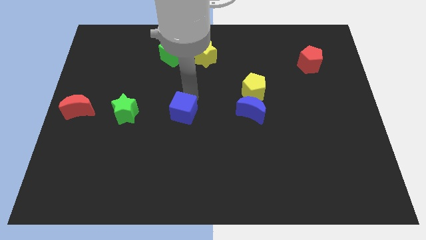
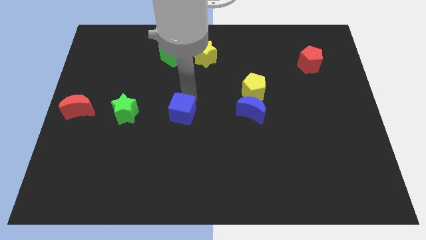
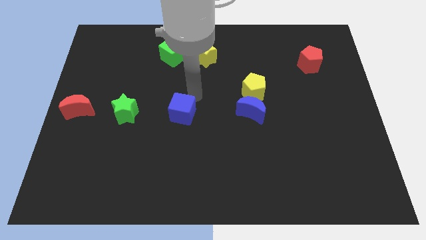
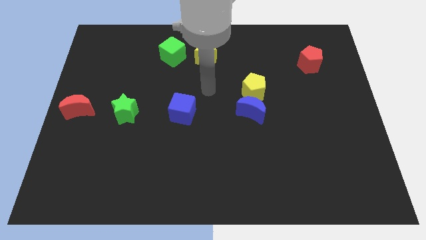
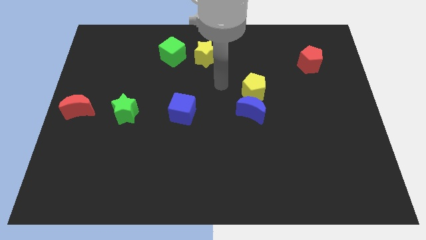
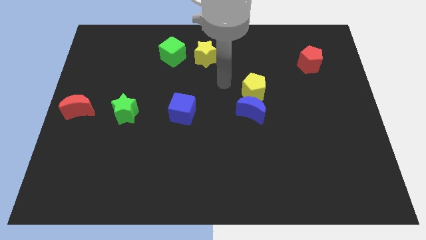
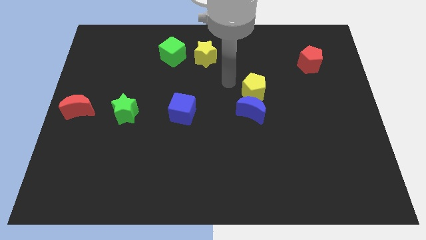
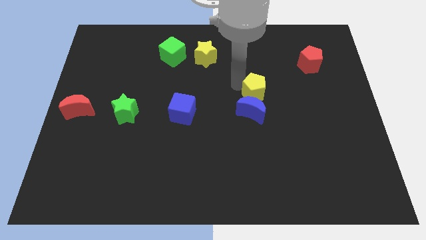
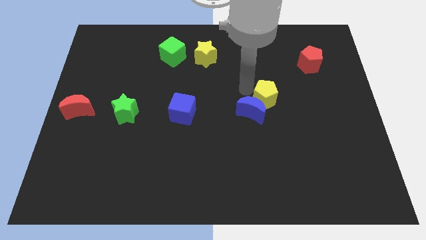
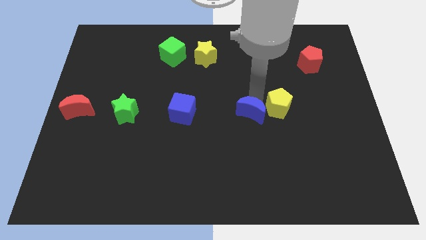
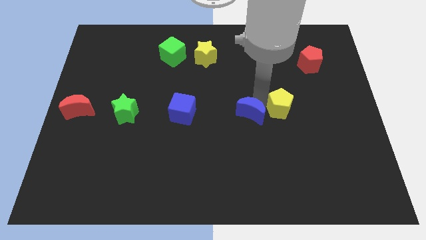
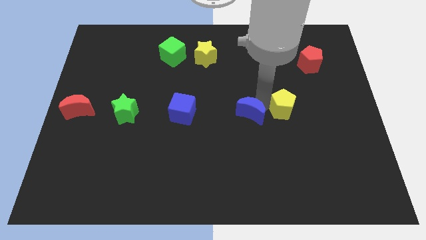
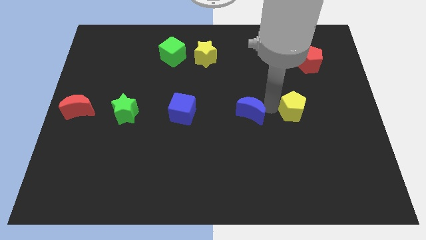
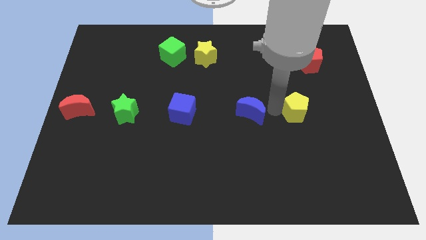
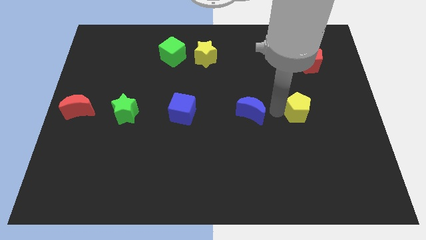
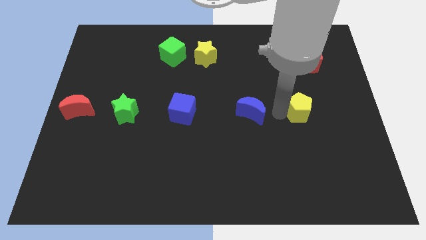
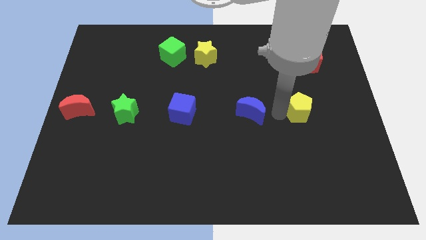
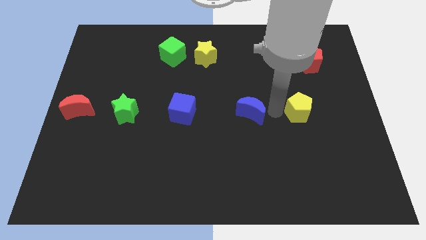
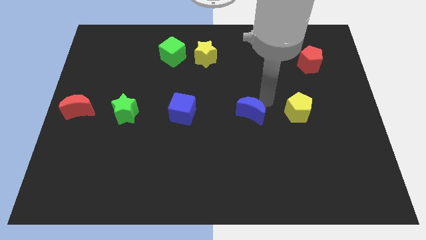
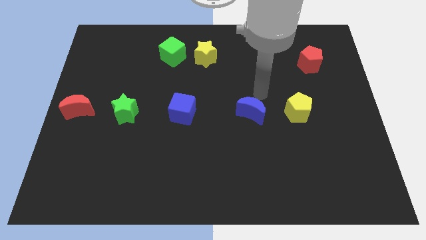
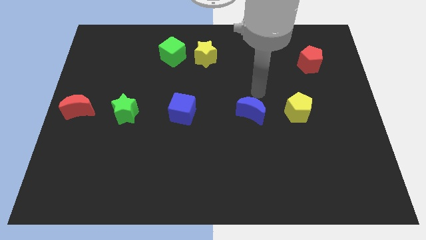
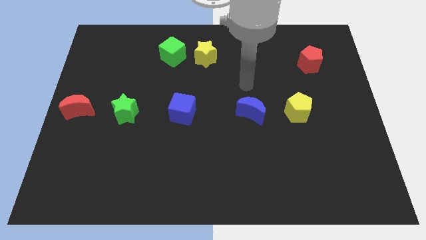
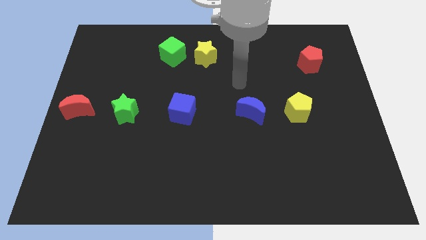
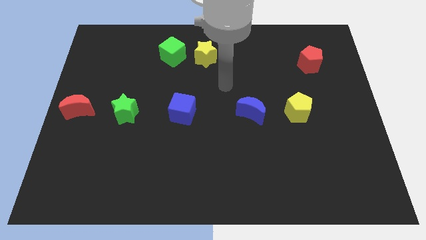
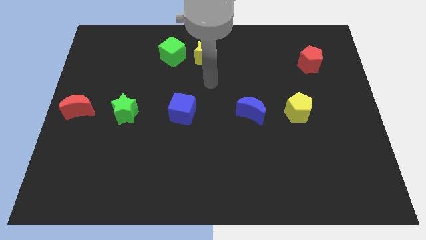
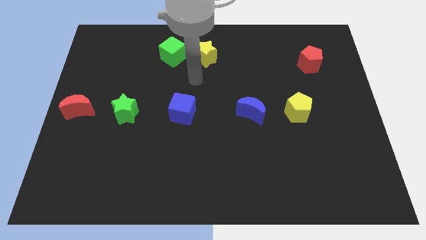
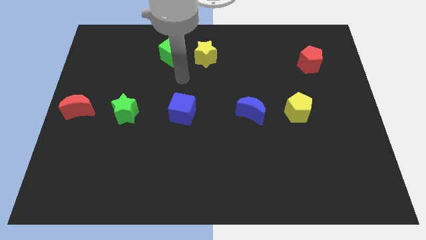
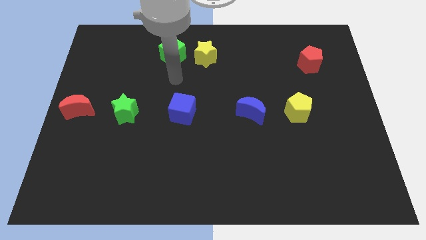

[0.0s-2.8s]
place the yellow pentagon below the red pentagon

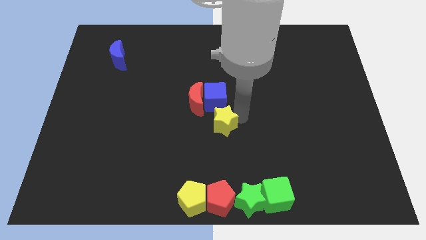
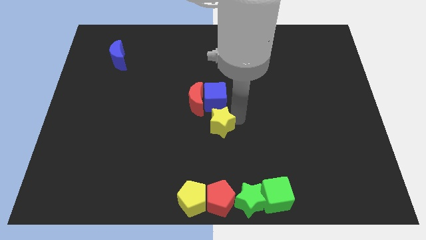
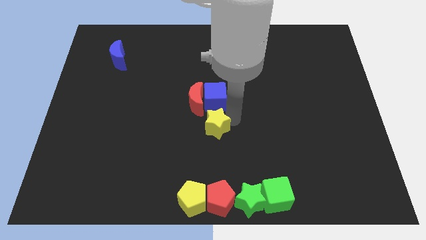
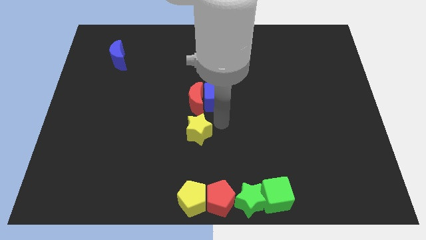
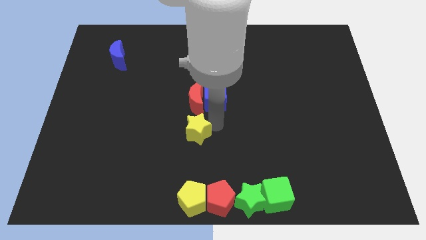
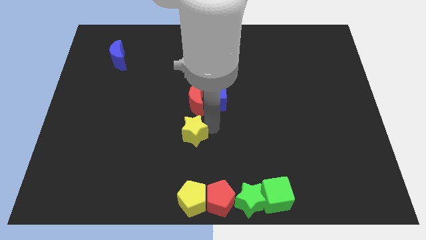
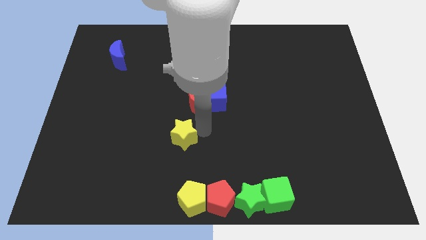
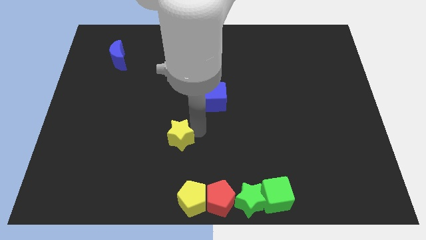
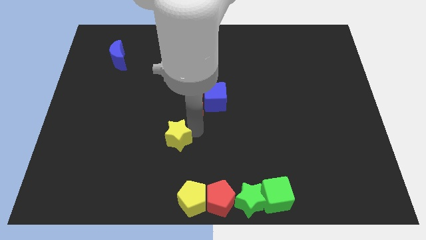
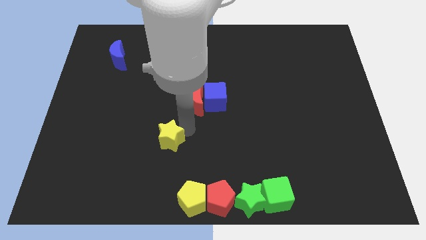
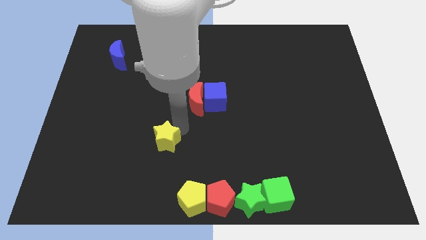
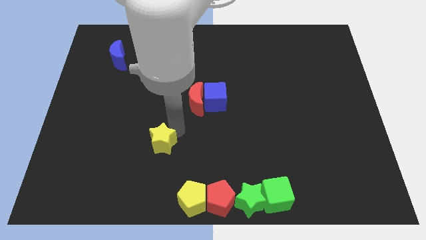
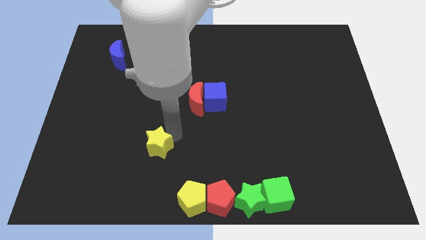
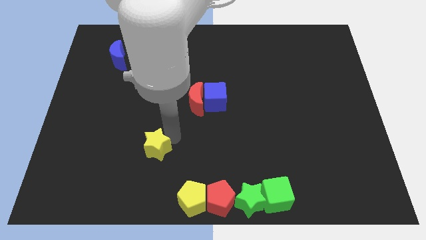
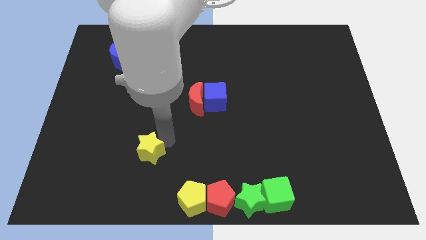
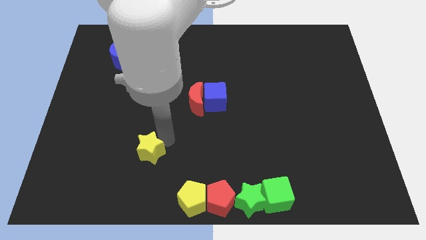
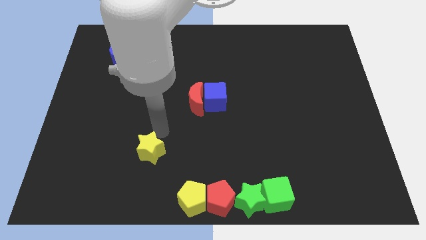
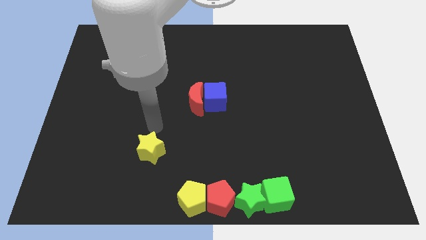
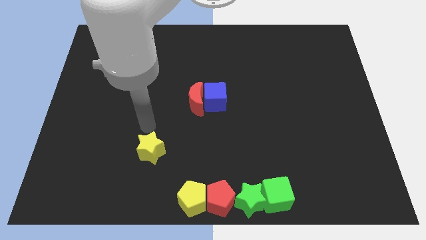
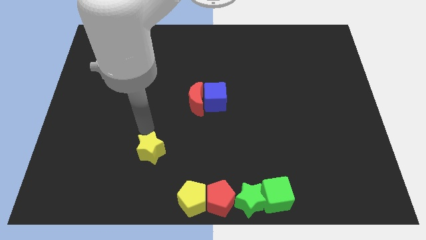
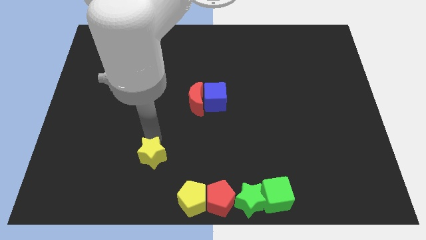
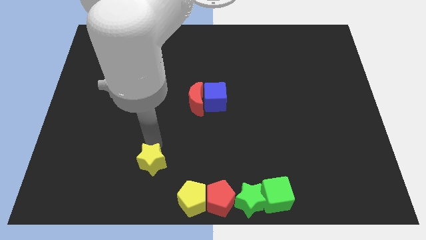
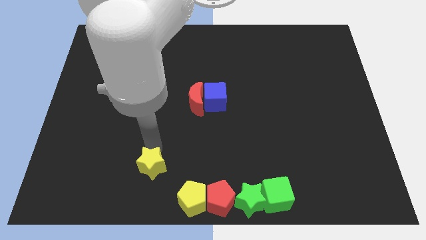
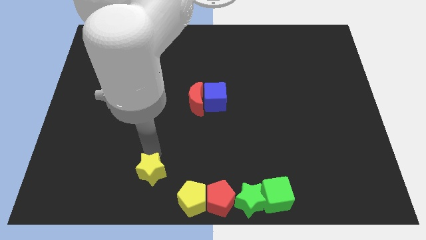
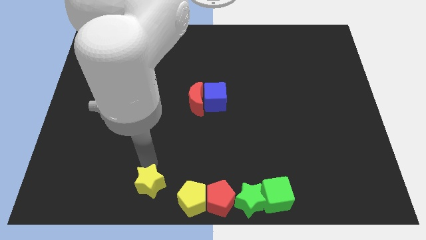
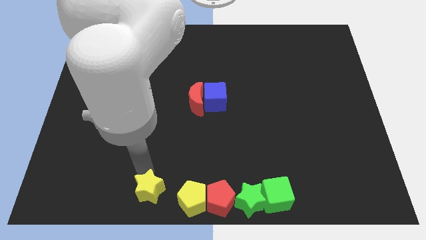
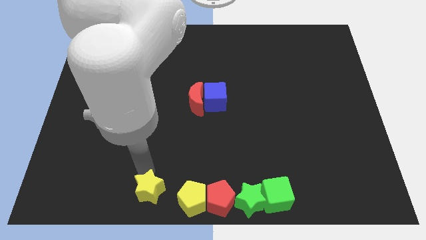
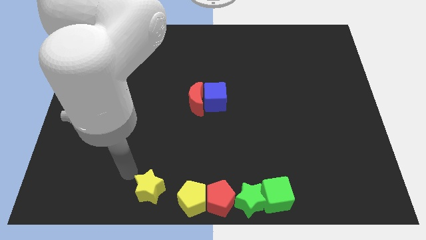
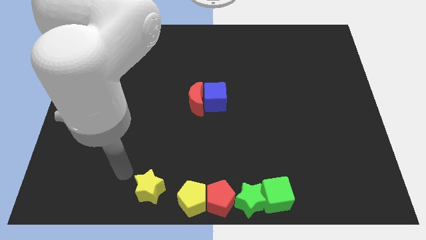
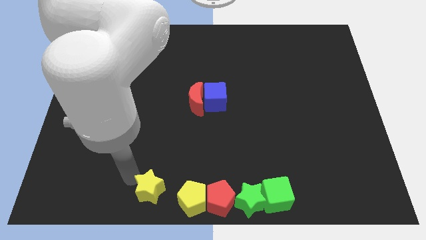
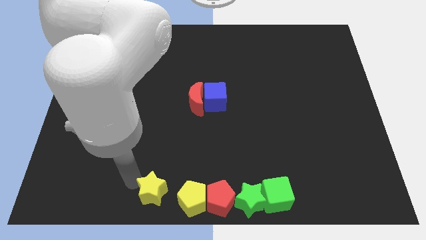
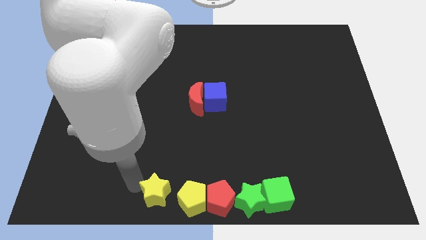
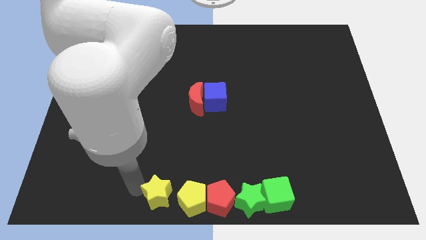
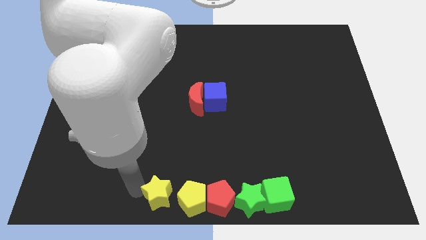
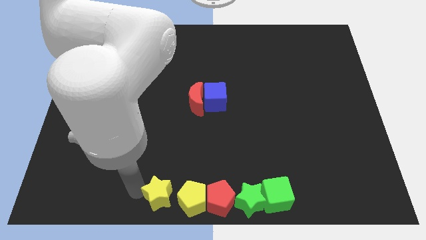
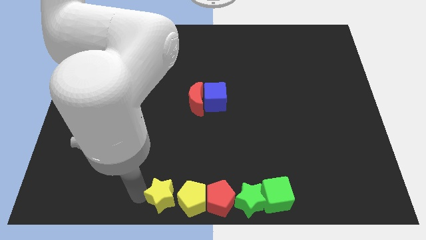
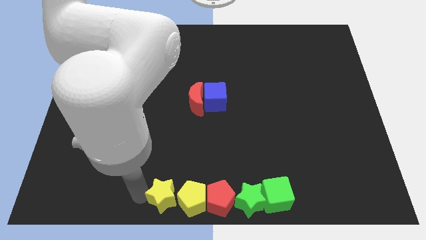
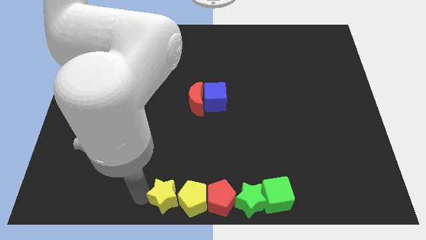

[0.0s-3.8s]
push the yellow star to the left of the yellow pentagon

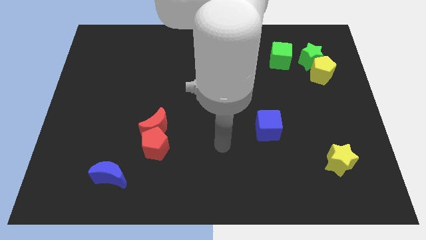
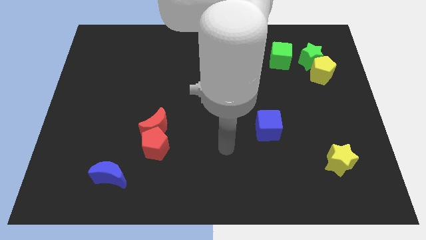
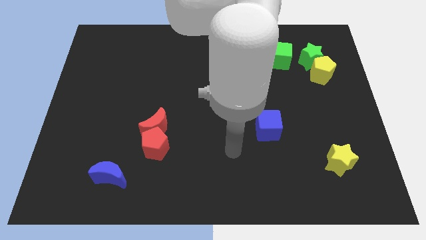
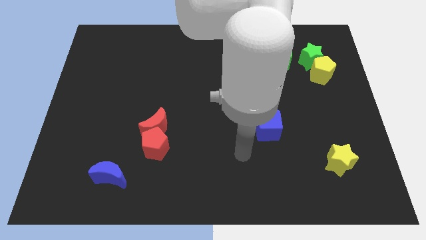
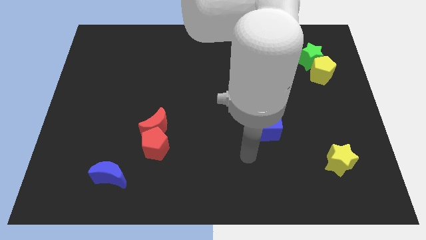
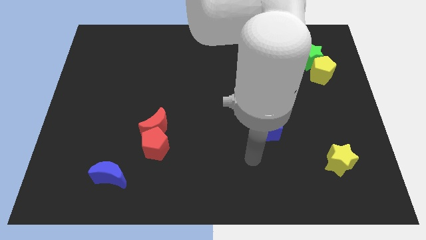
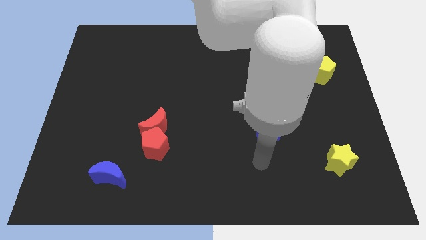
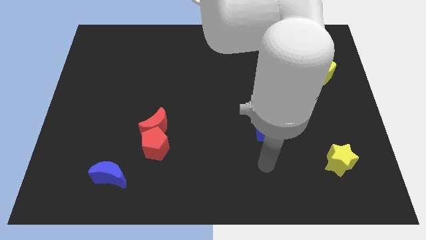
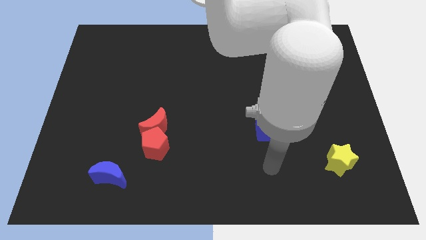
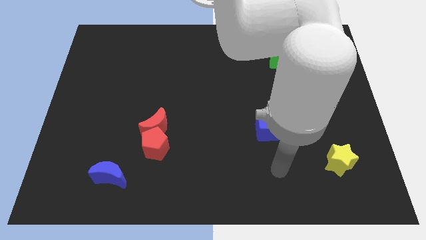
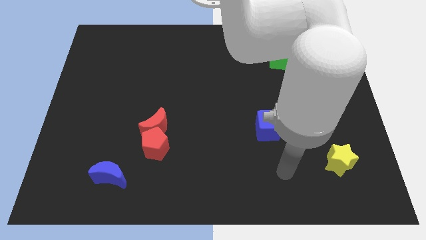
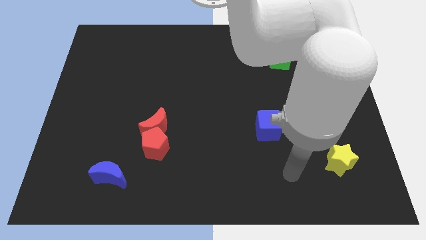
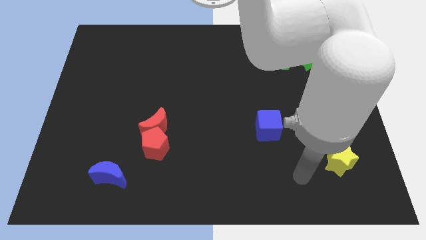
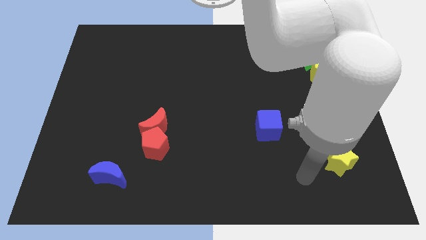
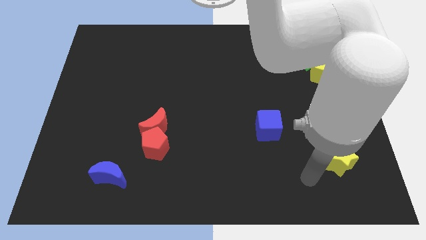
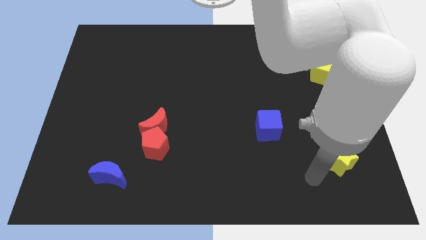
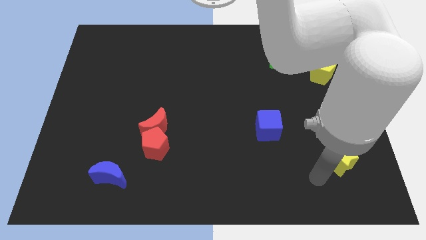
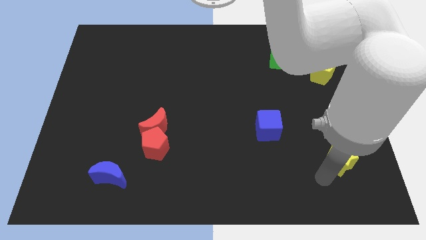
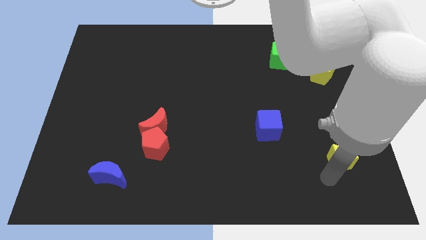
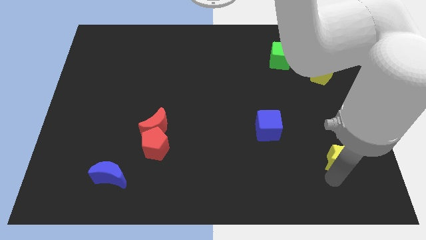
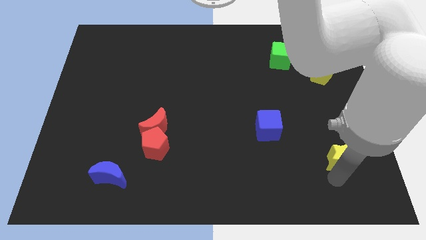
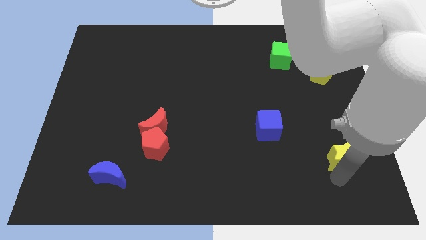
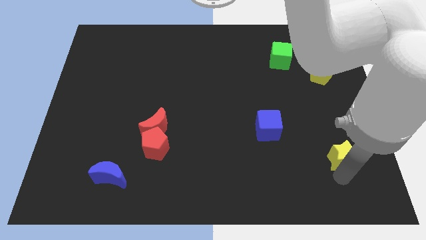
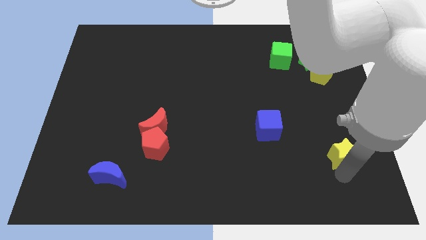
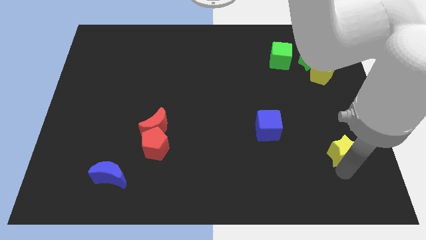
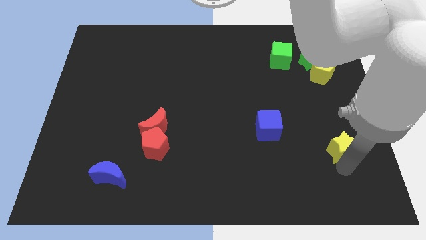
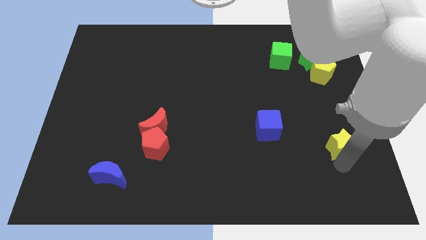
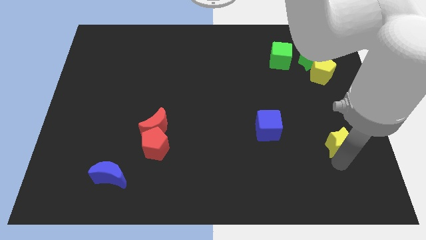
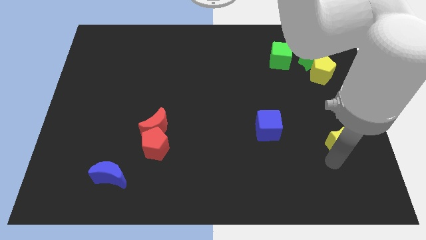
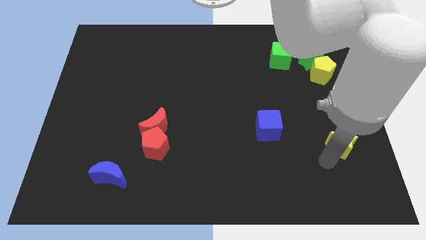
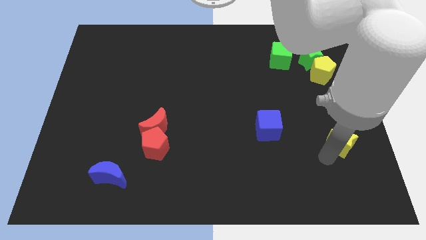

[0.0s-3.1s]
put your arm below to the yellow star
